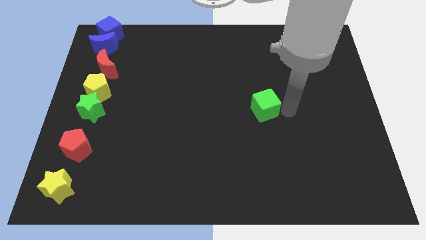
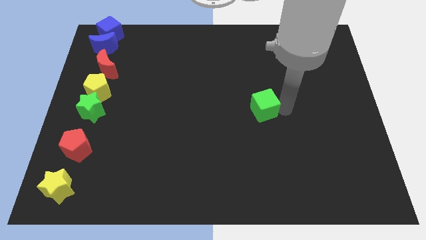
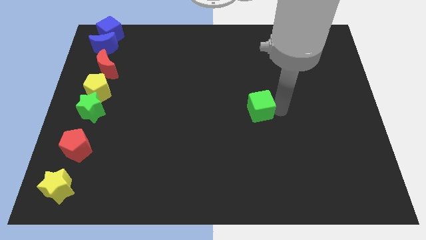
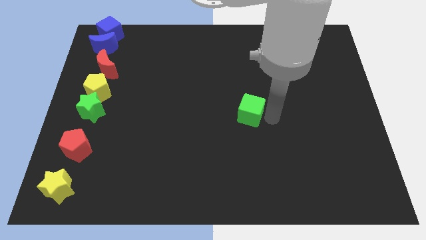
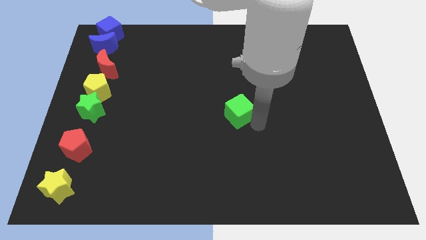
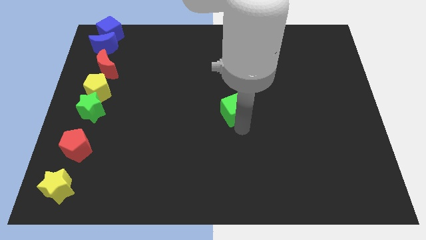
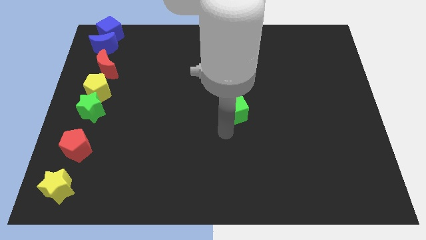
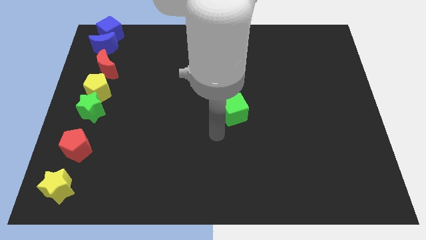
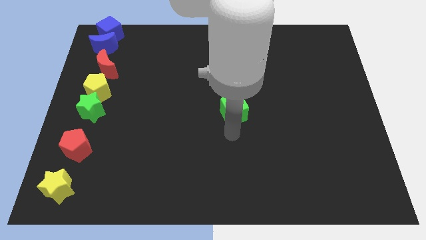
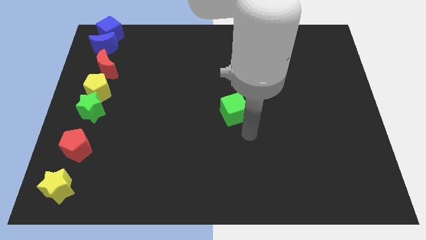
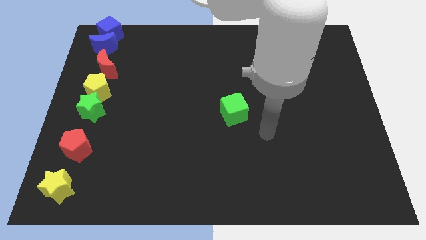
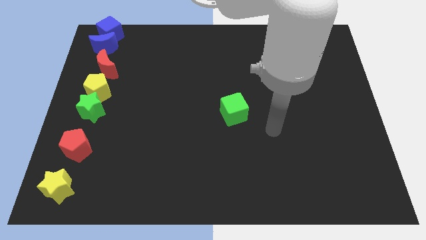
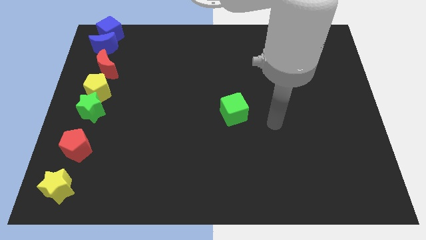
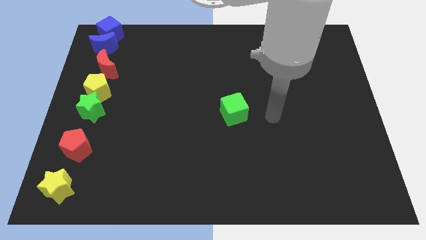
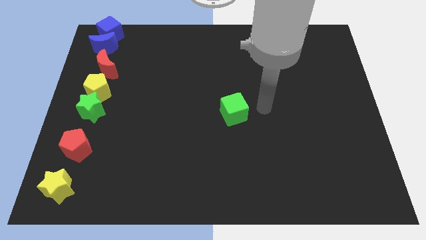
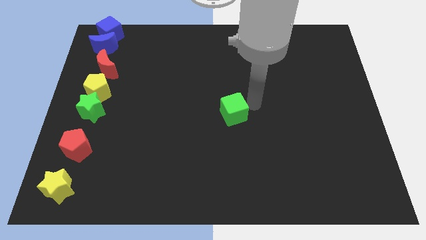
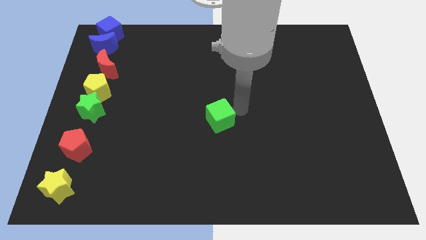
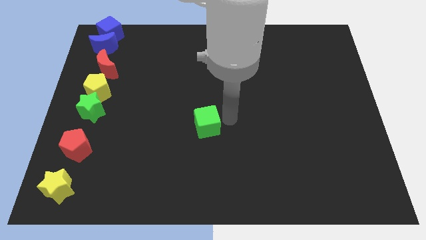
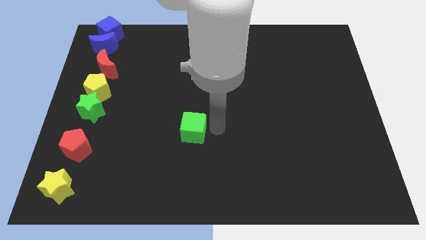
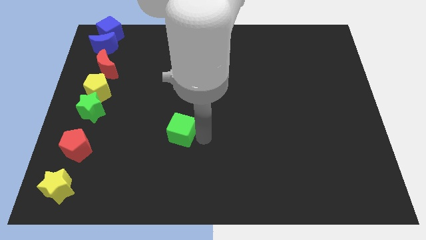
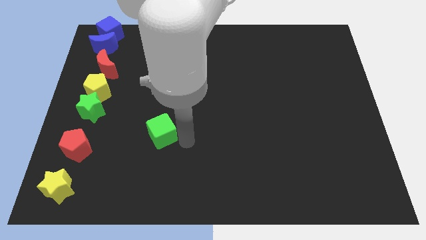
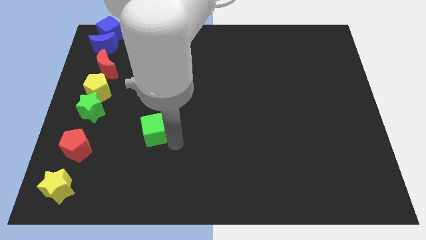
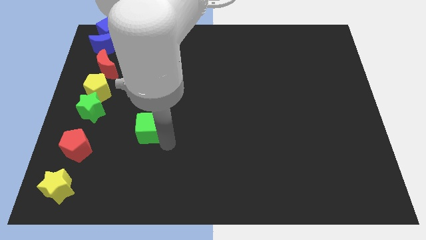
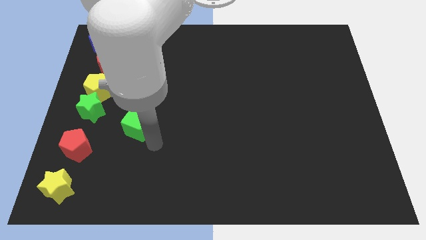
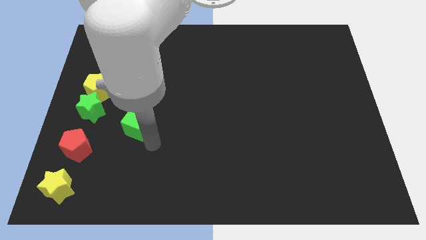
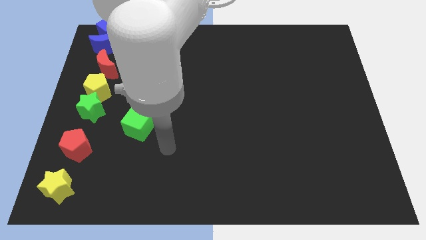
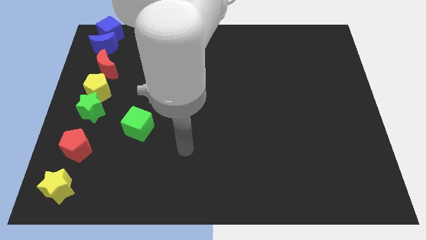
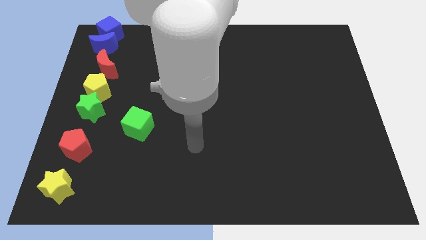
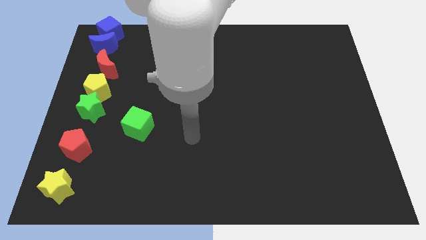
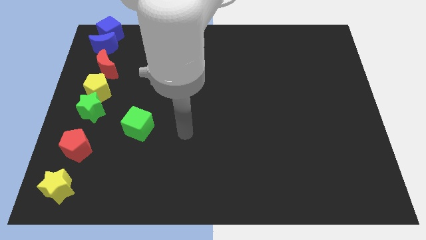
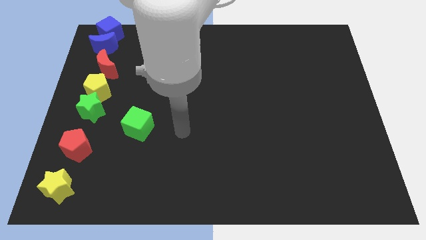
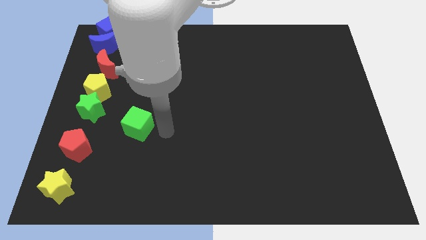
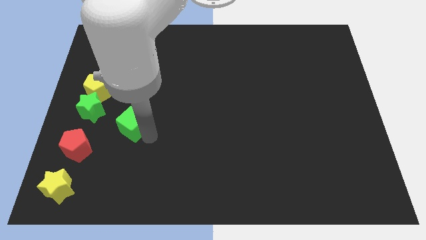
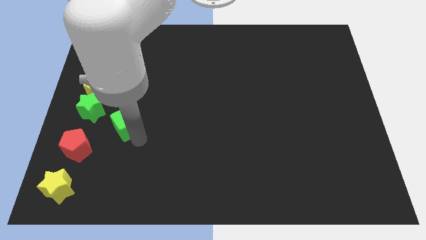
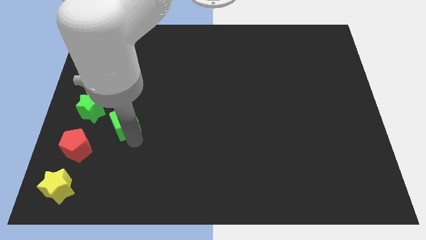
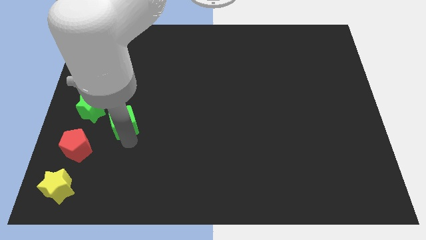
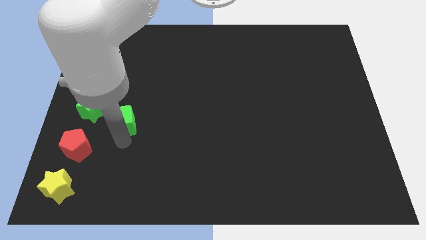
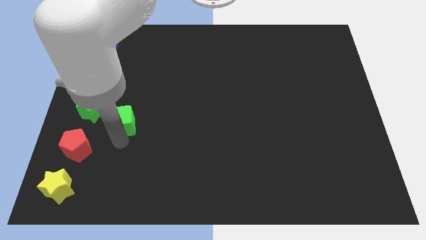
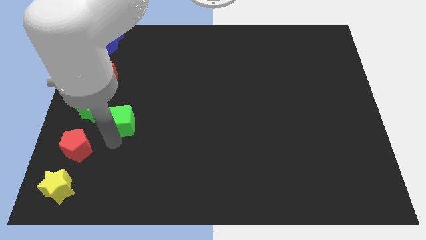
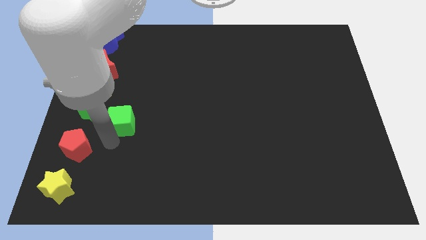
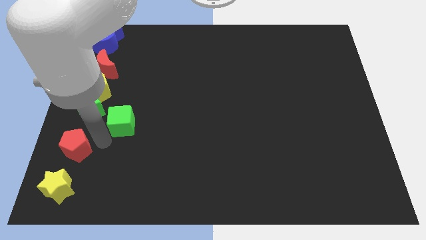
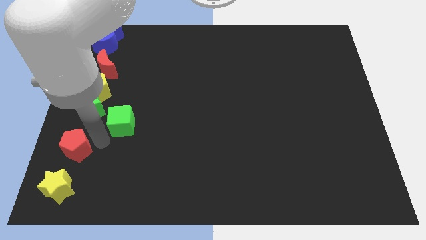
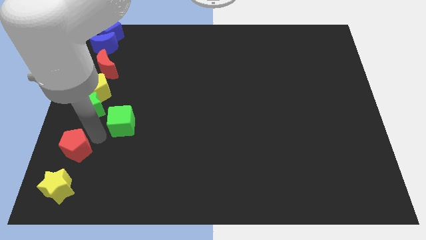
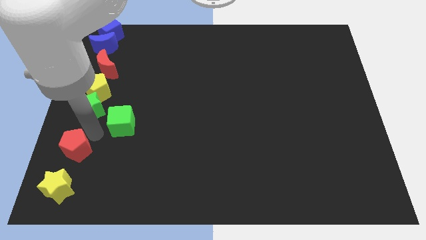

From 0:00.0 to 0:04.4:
push the green cube to the right of the green star

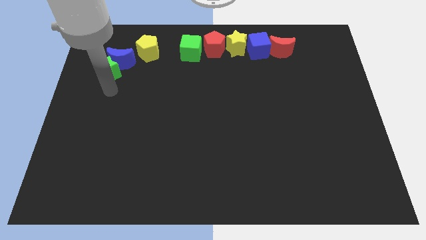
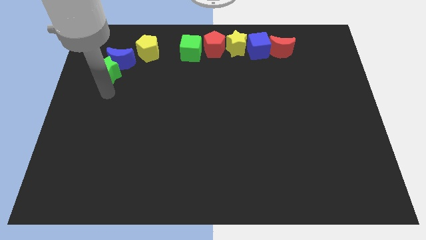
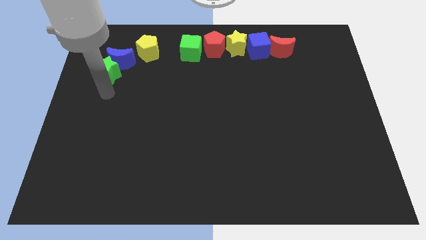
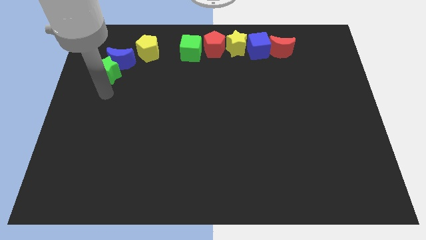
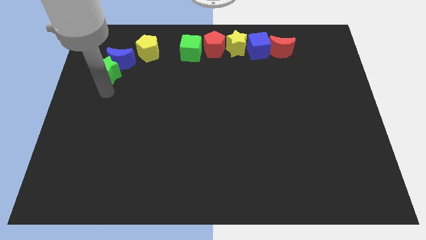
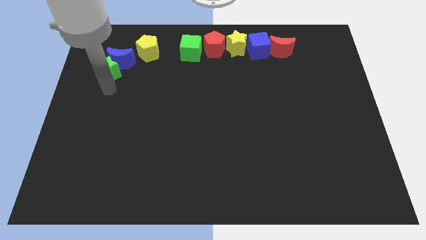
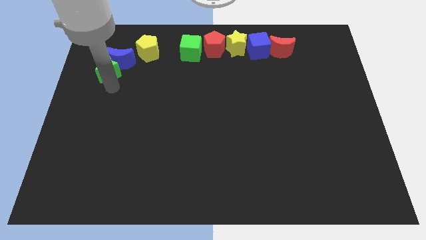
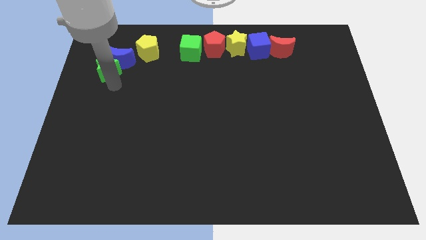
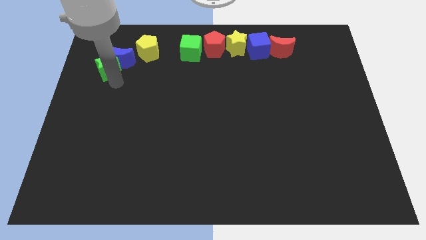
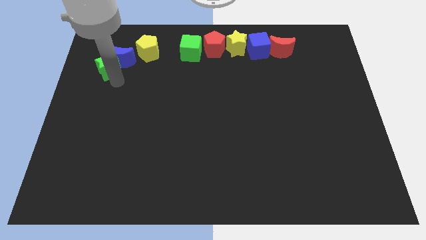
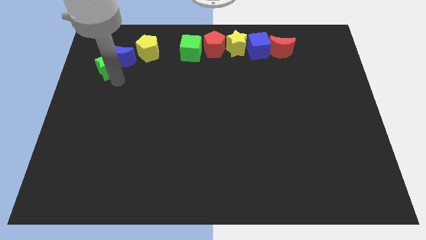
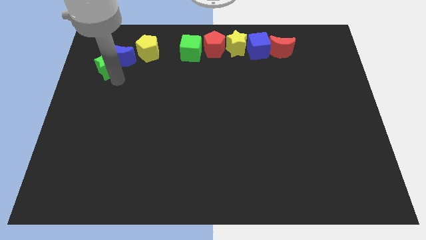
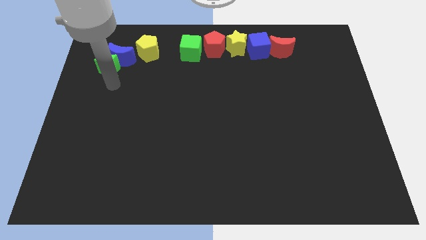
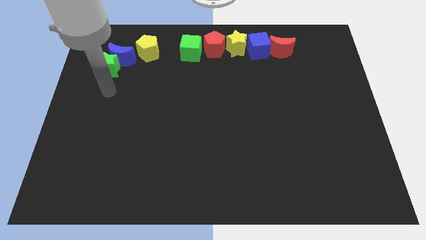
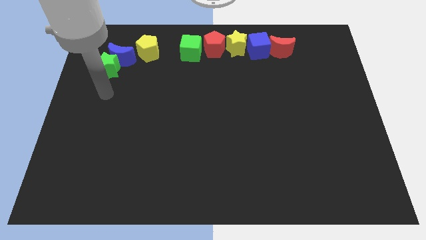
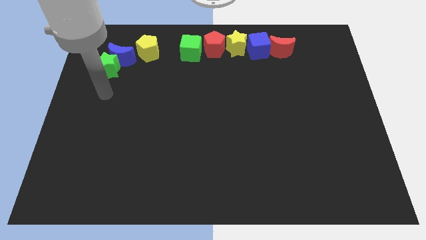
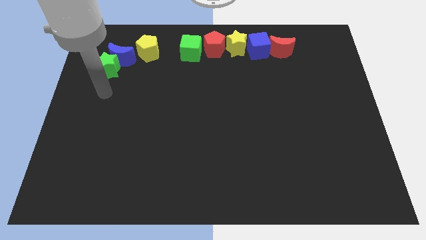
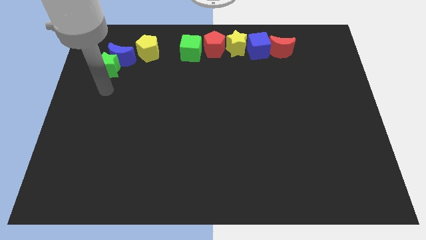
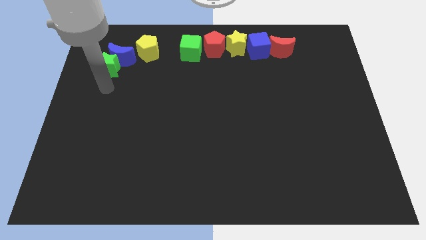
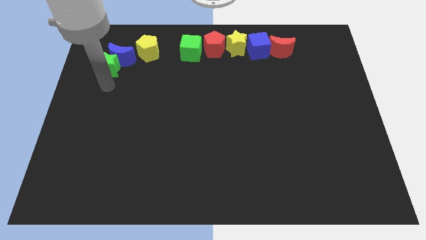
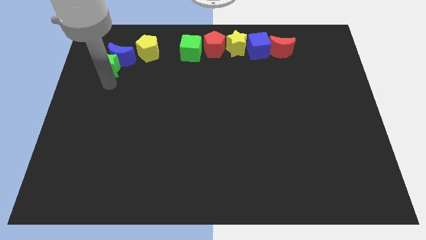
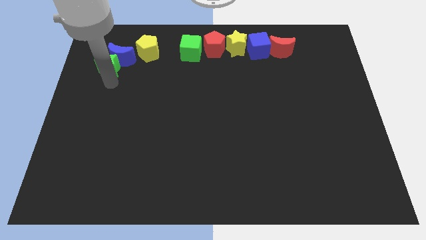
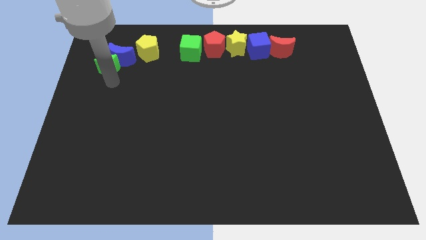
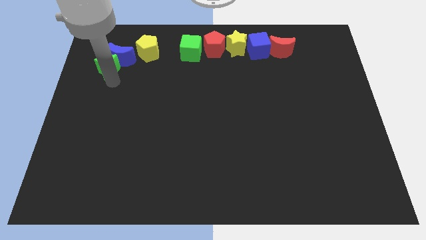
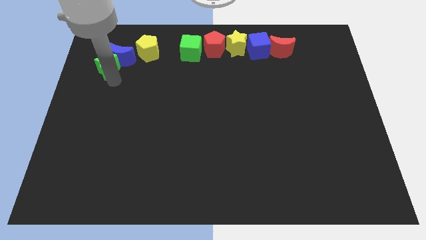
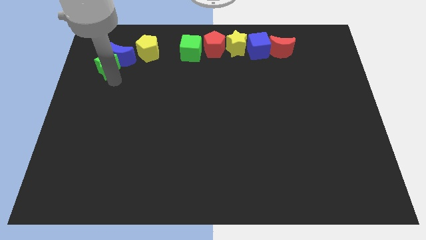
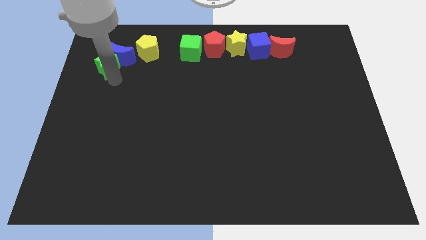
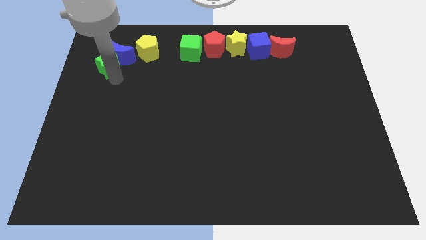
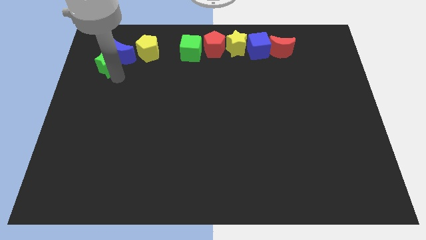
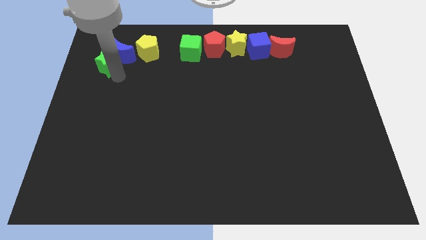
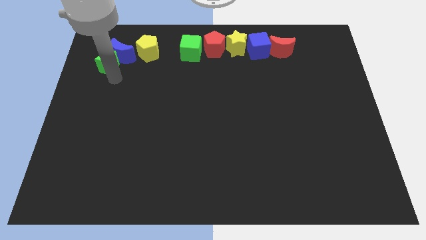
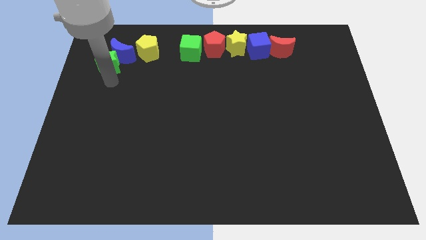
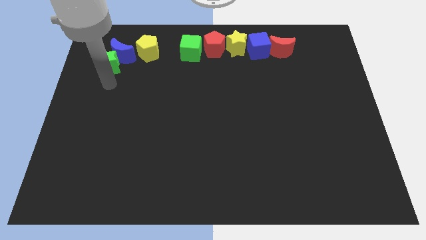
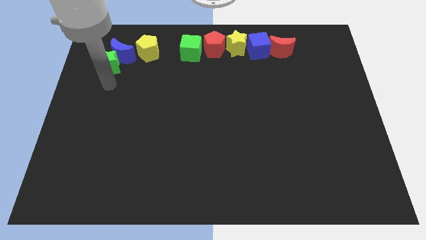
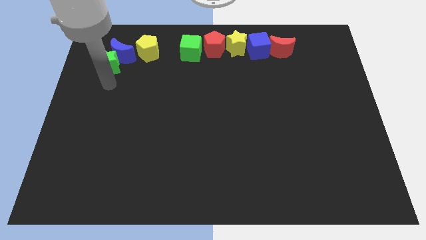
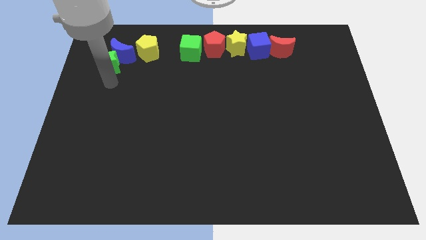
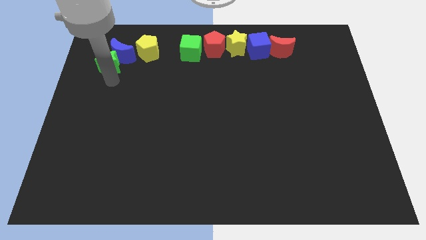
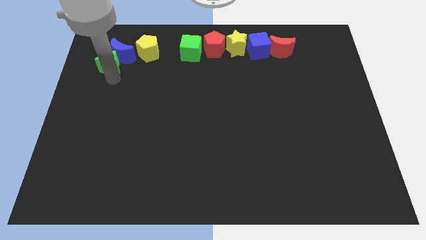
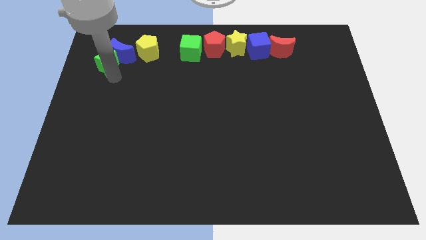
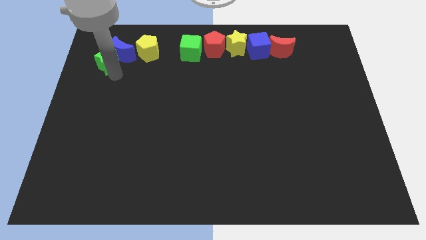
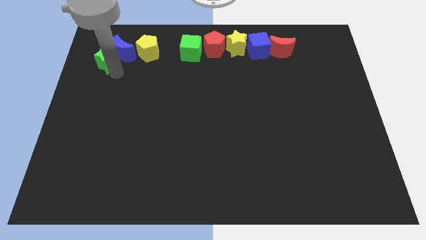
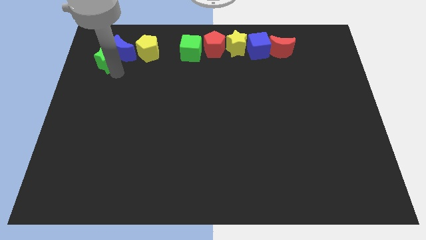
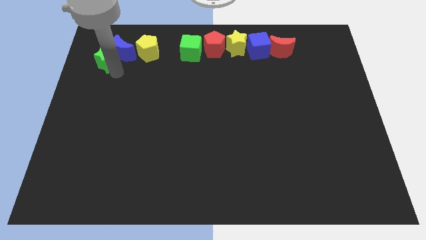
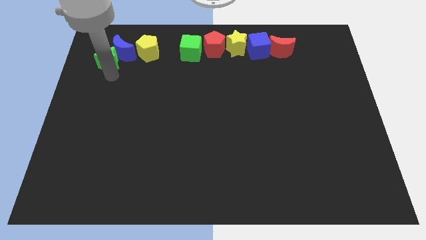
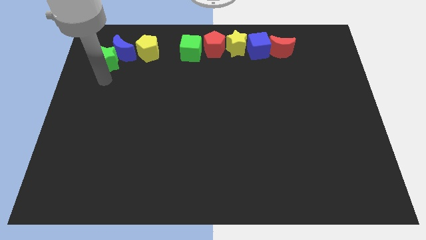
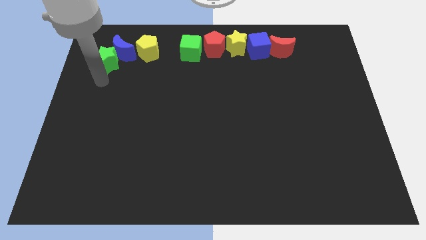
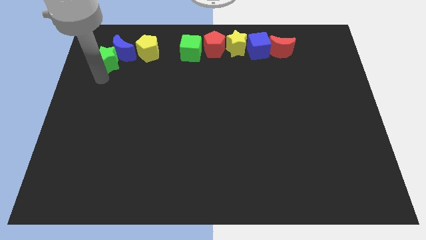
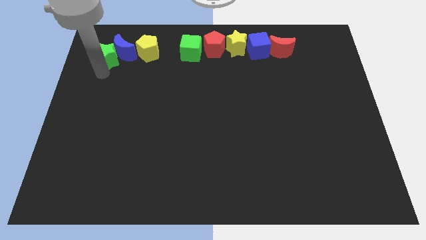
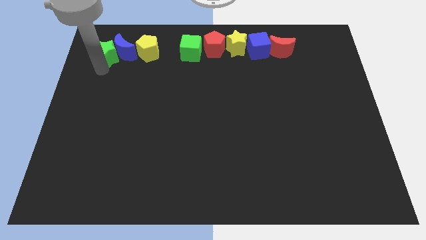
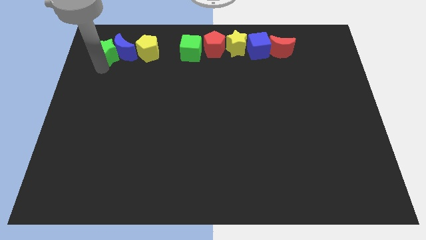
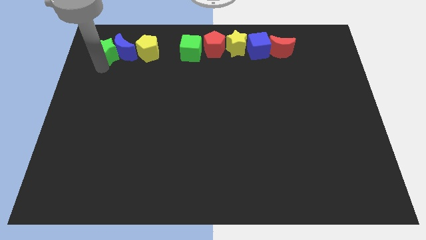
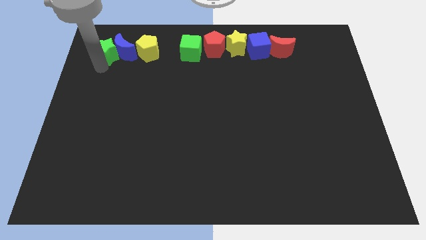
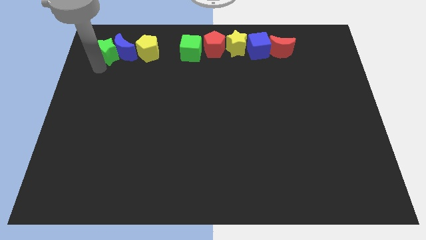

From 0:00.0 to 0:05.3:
place the blue moon and green star to the left side of the yellow pentagon
